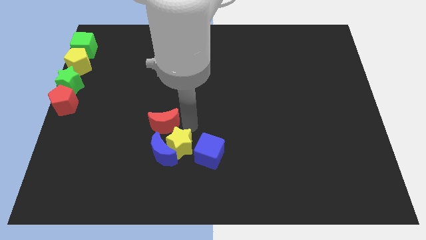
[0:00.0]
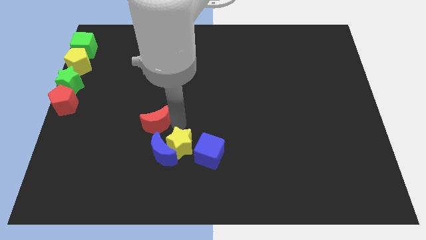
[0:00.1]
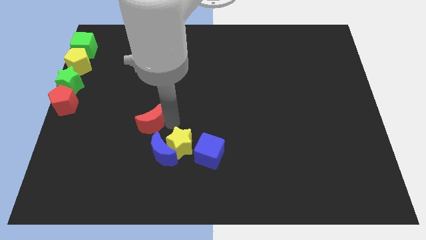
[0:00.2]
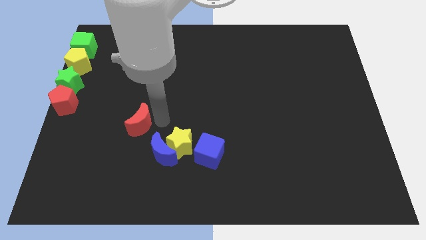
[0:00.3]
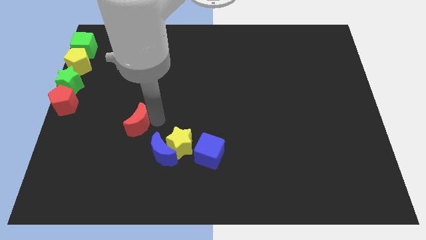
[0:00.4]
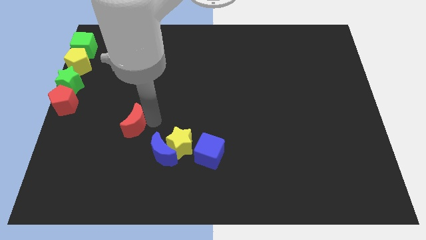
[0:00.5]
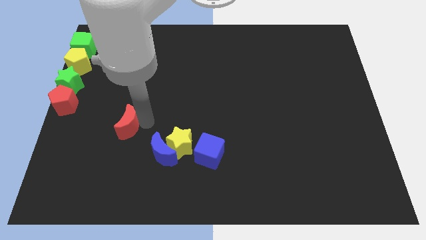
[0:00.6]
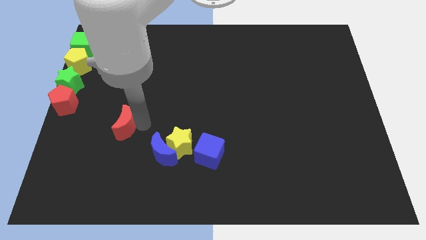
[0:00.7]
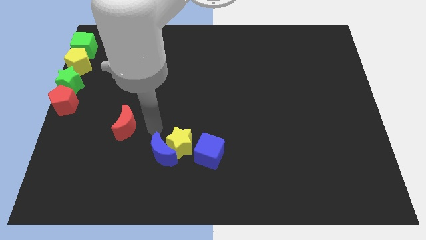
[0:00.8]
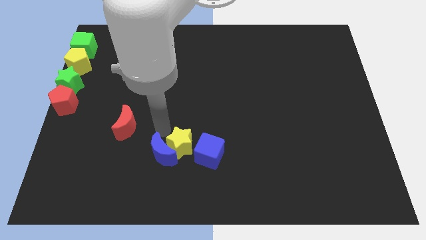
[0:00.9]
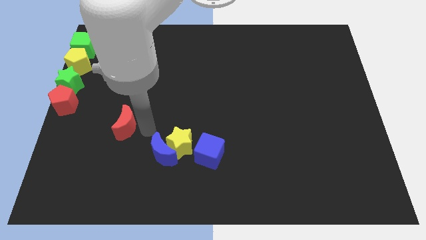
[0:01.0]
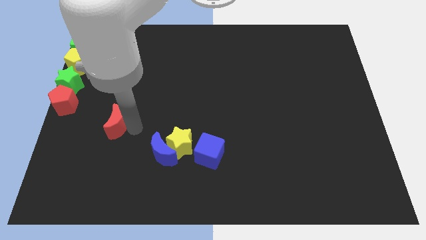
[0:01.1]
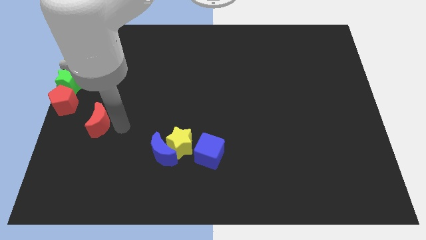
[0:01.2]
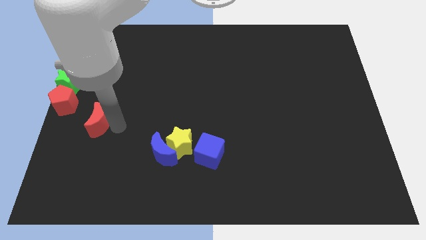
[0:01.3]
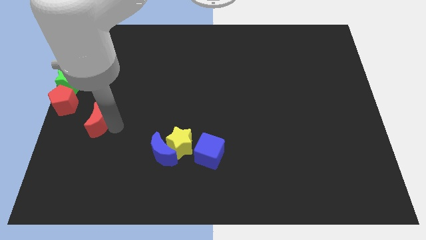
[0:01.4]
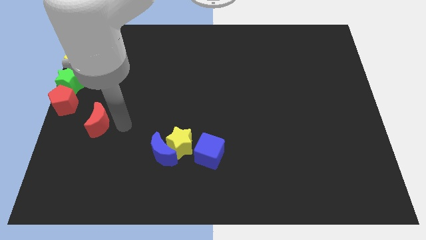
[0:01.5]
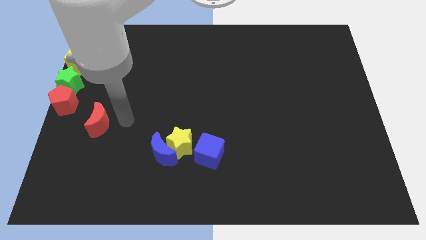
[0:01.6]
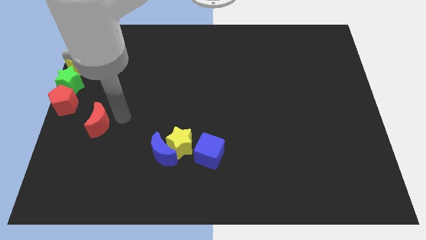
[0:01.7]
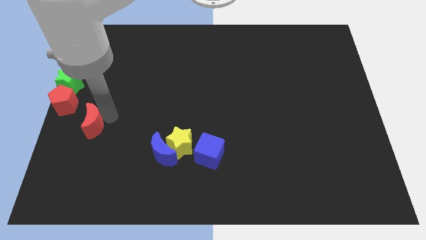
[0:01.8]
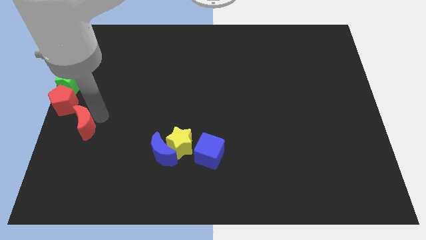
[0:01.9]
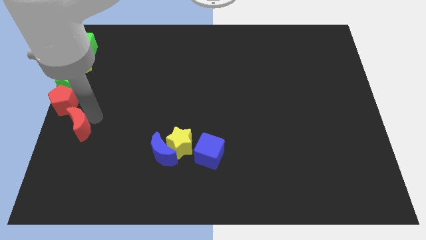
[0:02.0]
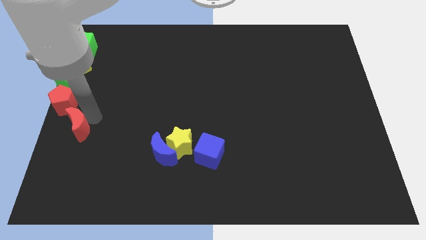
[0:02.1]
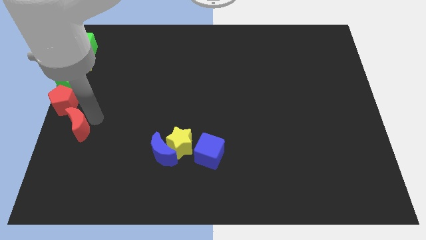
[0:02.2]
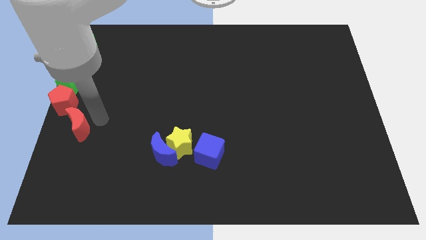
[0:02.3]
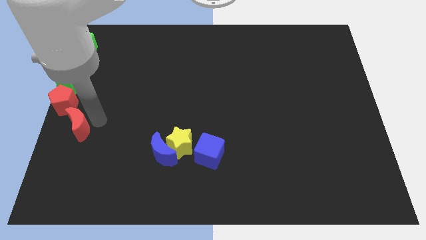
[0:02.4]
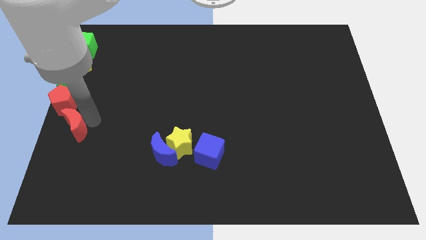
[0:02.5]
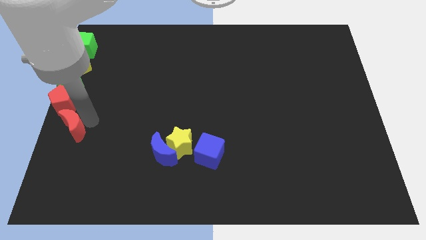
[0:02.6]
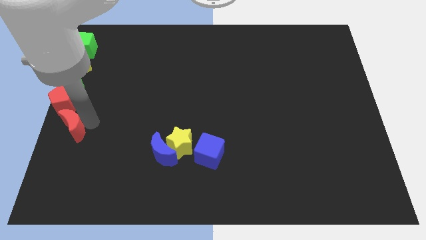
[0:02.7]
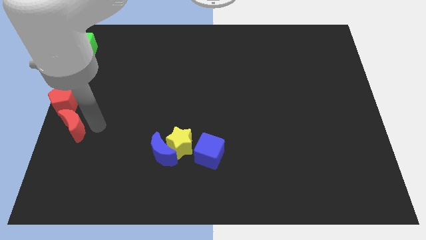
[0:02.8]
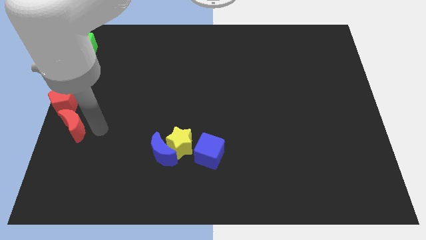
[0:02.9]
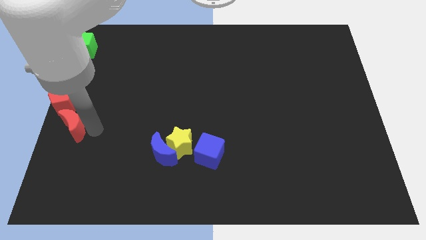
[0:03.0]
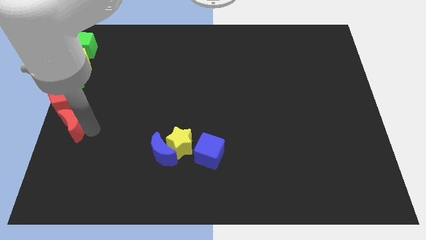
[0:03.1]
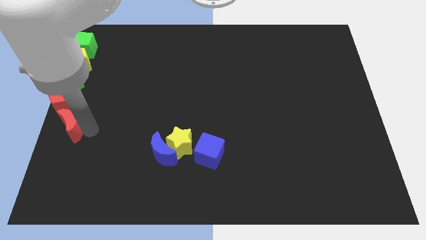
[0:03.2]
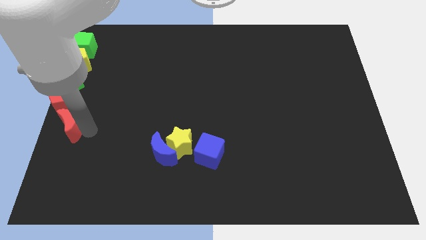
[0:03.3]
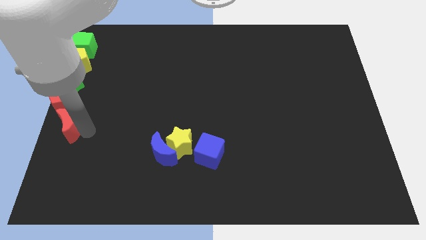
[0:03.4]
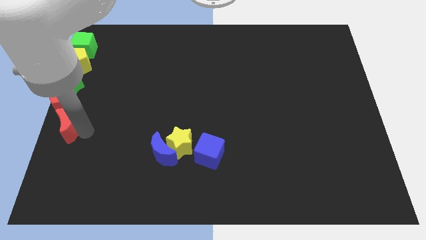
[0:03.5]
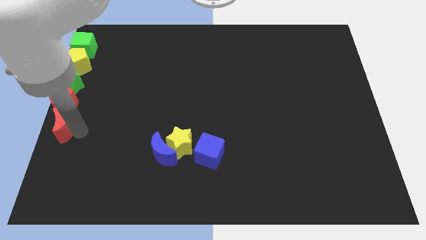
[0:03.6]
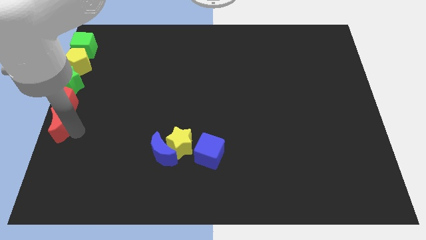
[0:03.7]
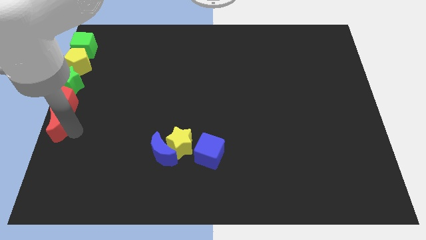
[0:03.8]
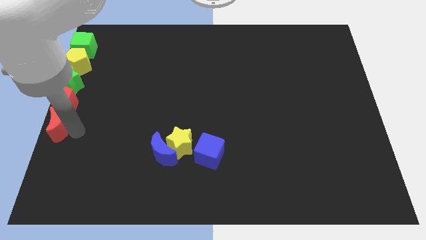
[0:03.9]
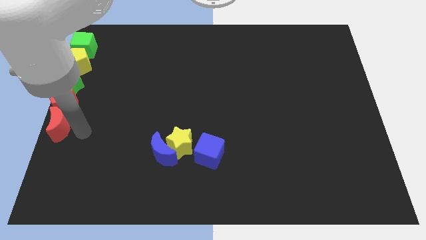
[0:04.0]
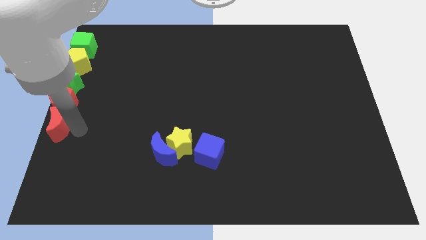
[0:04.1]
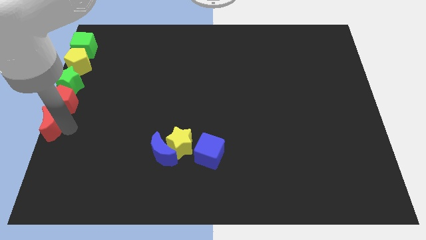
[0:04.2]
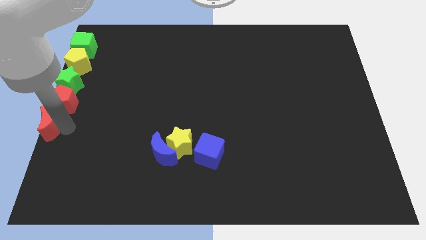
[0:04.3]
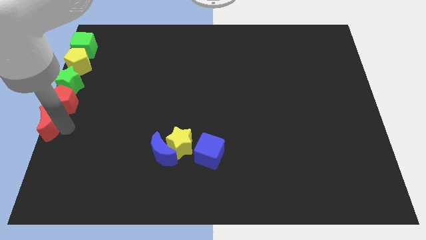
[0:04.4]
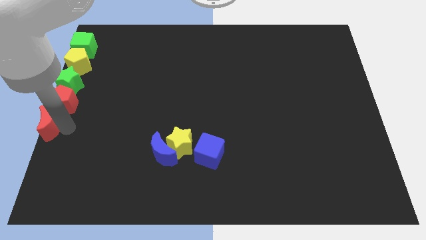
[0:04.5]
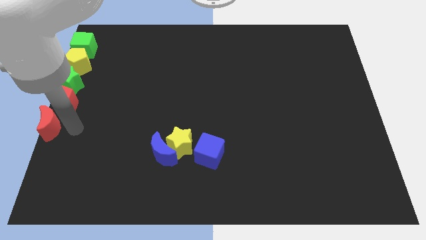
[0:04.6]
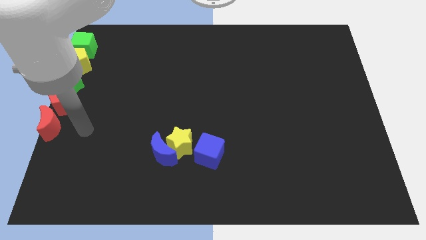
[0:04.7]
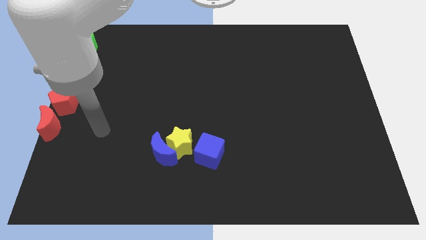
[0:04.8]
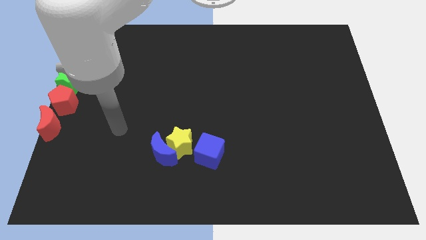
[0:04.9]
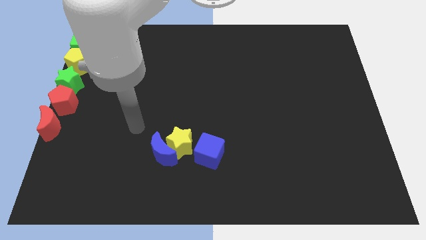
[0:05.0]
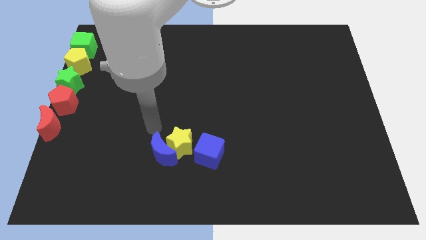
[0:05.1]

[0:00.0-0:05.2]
place the red moon below the red pentagon

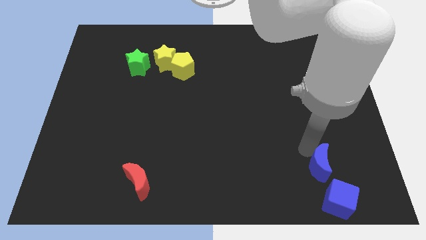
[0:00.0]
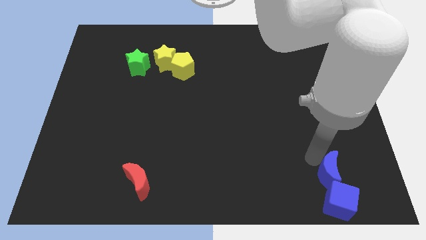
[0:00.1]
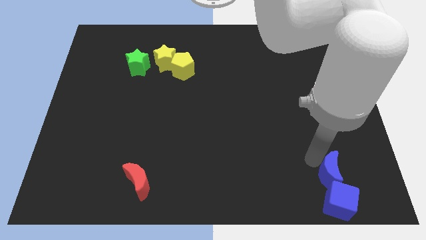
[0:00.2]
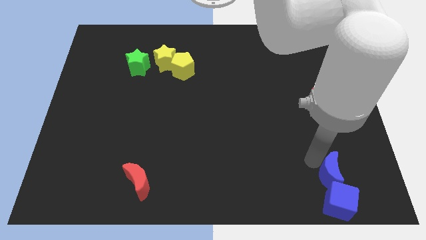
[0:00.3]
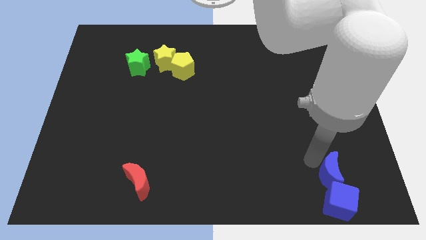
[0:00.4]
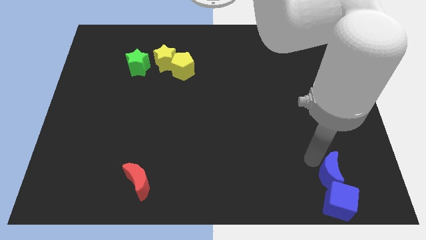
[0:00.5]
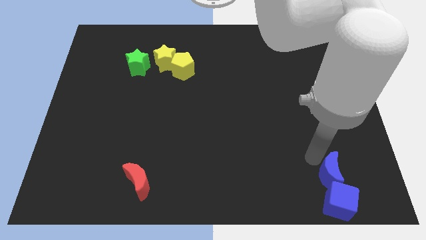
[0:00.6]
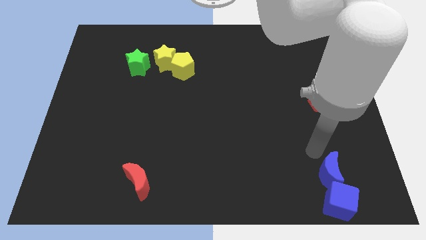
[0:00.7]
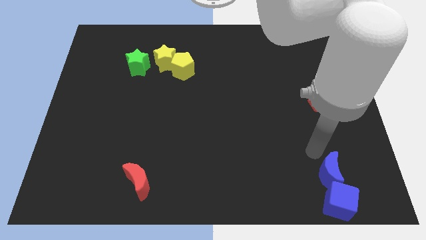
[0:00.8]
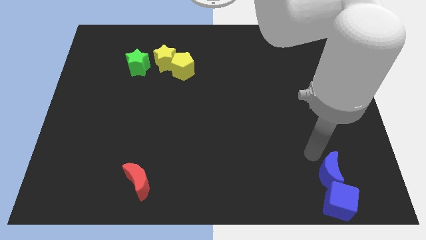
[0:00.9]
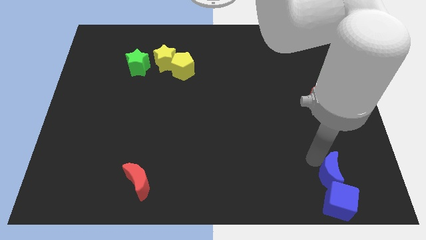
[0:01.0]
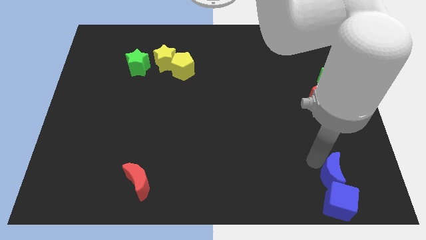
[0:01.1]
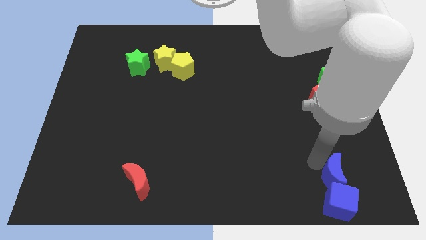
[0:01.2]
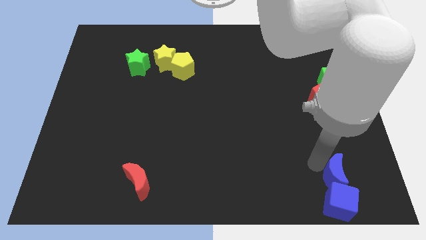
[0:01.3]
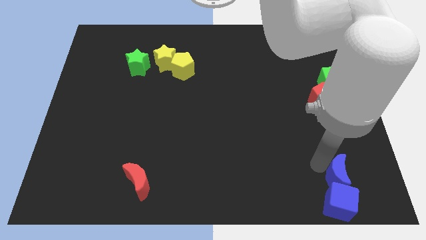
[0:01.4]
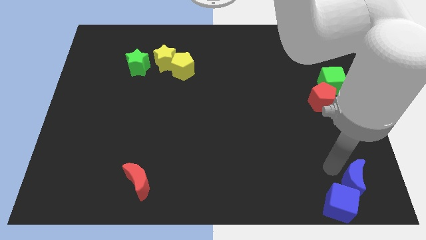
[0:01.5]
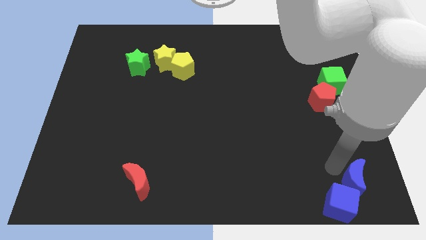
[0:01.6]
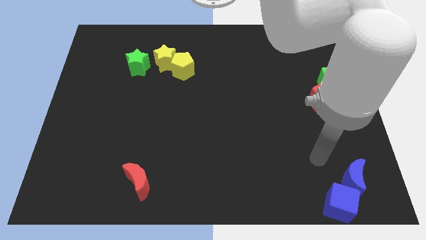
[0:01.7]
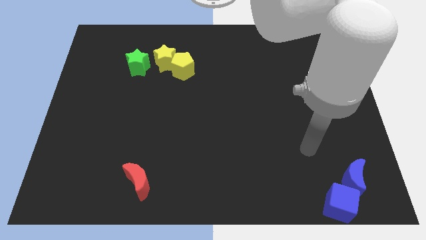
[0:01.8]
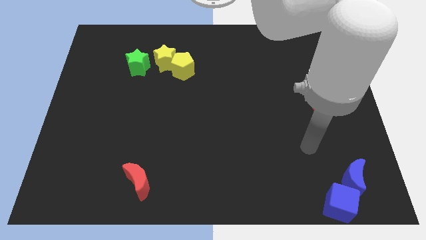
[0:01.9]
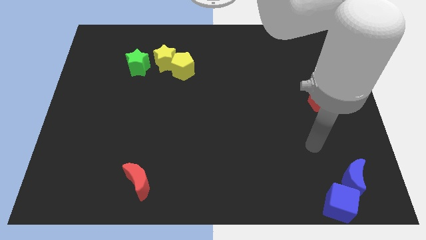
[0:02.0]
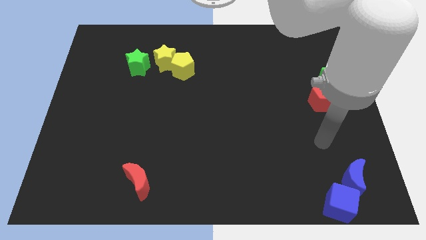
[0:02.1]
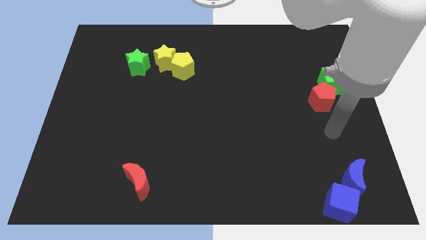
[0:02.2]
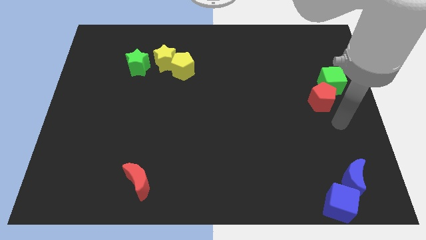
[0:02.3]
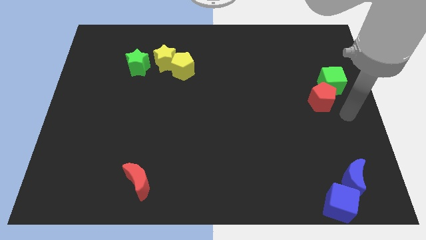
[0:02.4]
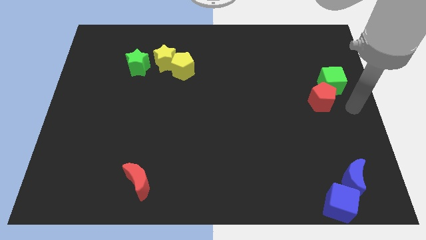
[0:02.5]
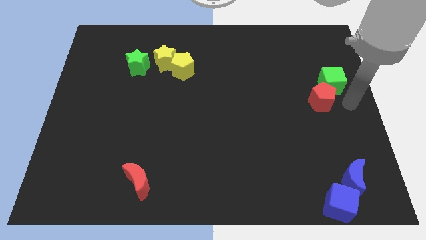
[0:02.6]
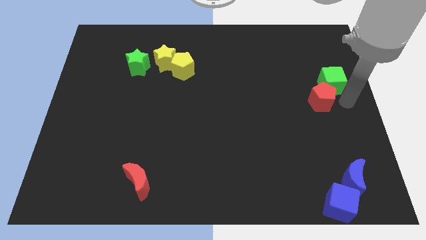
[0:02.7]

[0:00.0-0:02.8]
place the blue moon and blue cube together at the bottom right of the board

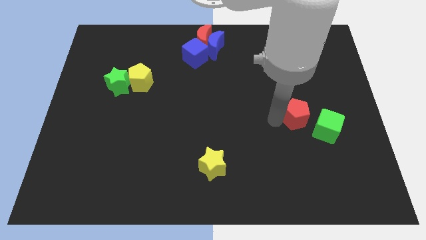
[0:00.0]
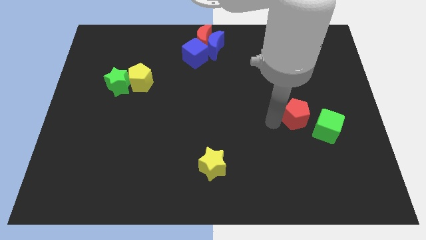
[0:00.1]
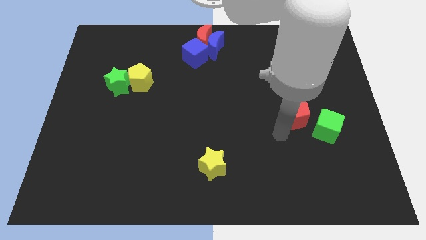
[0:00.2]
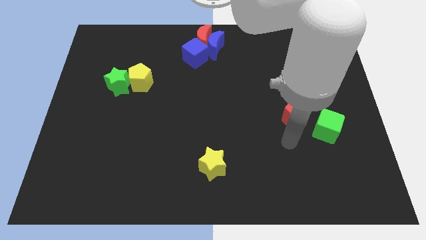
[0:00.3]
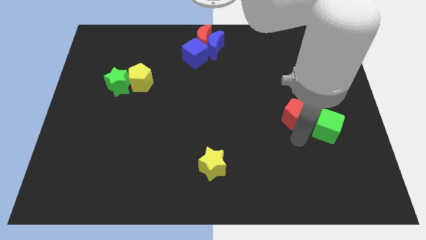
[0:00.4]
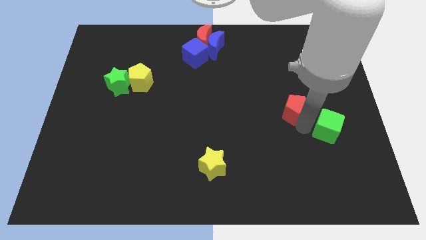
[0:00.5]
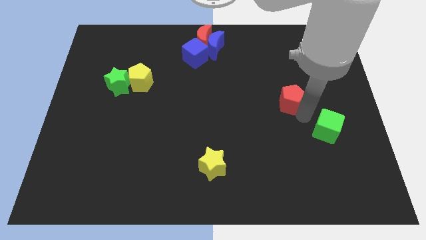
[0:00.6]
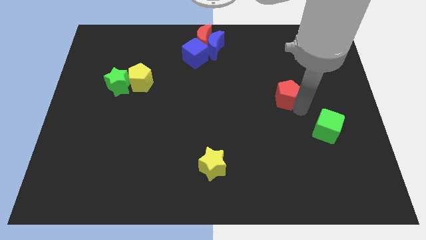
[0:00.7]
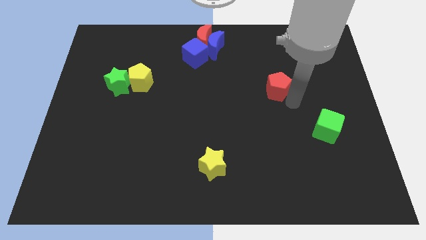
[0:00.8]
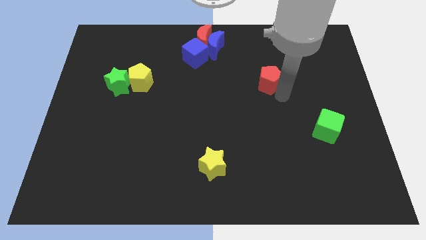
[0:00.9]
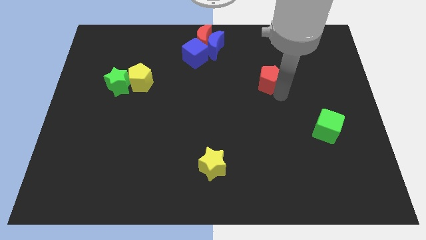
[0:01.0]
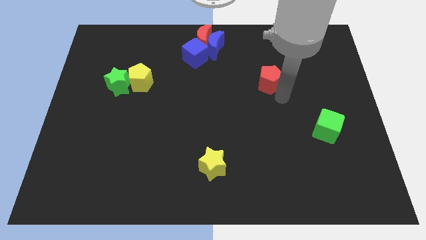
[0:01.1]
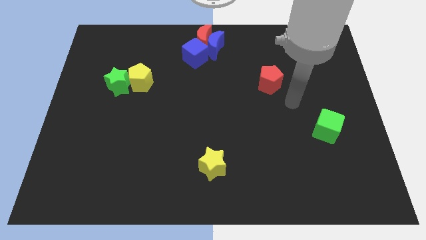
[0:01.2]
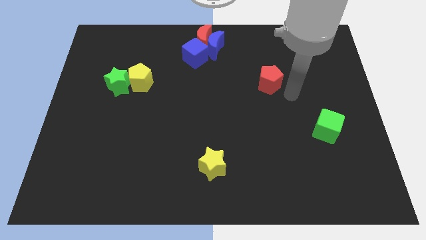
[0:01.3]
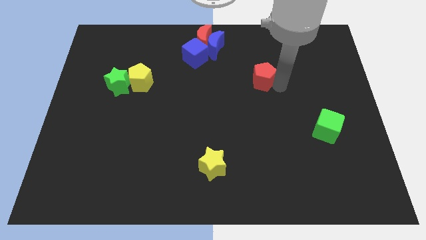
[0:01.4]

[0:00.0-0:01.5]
push the red pentagon slightly to the top of the board
